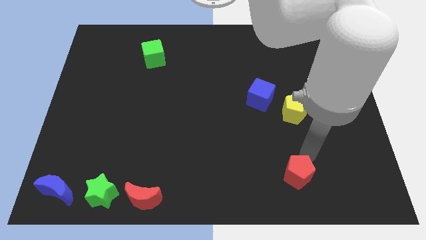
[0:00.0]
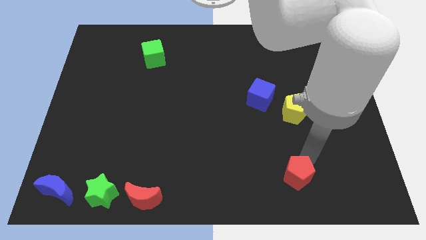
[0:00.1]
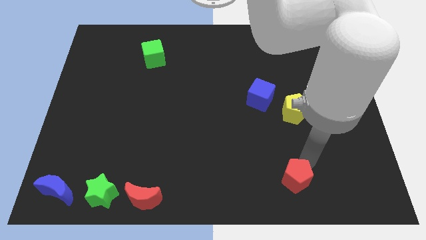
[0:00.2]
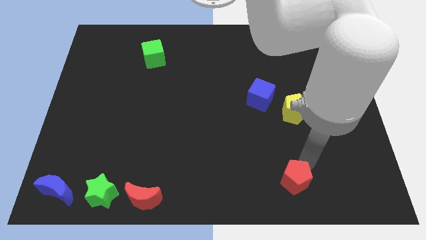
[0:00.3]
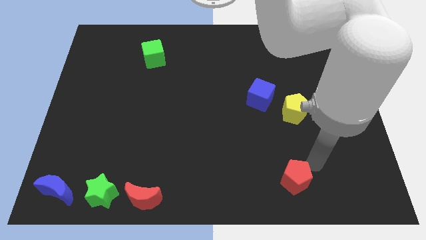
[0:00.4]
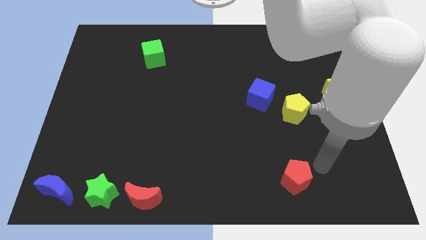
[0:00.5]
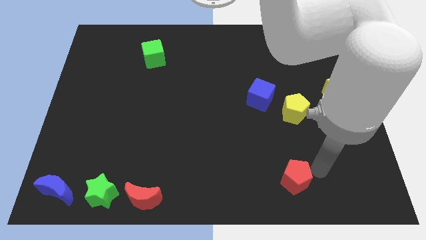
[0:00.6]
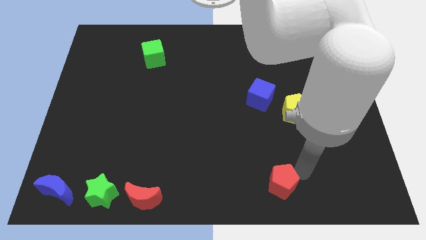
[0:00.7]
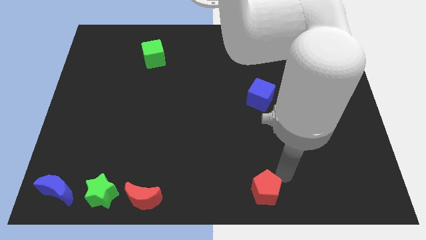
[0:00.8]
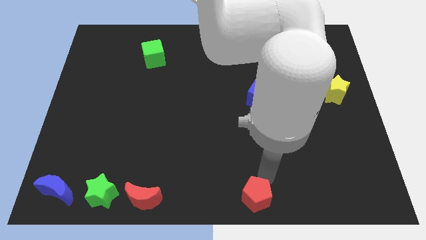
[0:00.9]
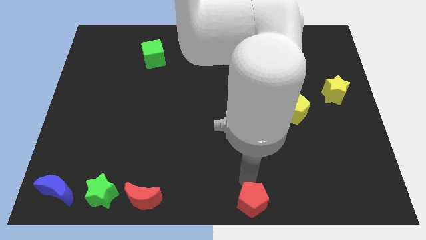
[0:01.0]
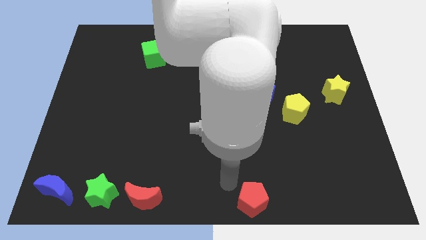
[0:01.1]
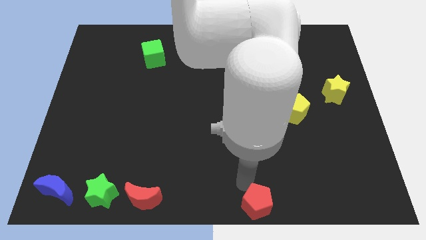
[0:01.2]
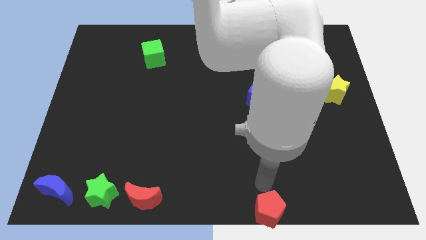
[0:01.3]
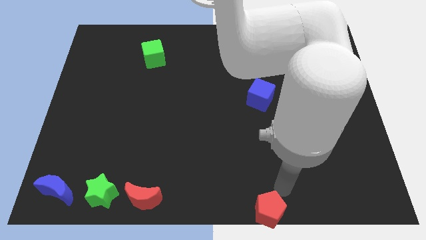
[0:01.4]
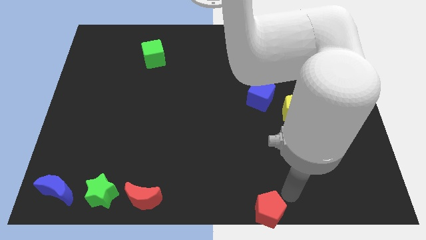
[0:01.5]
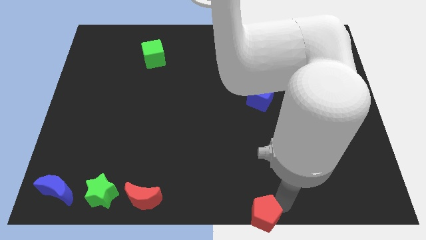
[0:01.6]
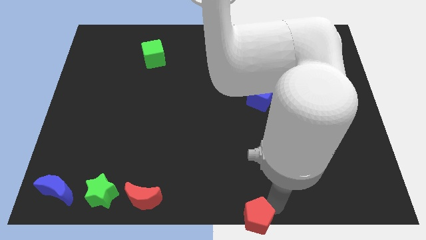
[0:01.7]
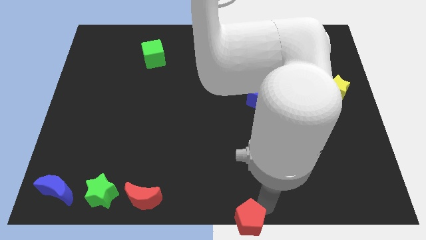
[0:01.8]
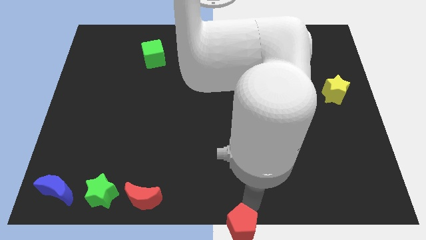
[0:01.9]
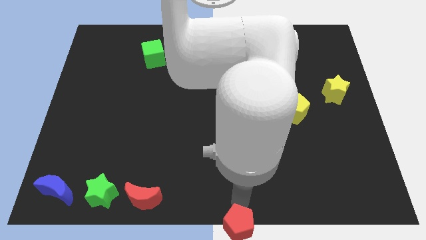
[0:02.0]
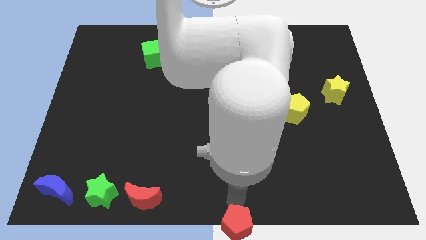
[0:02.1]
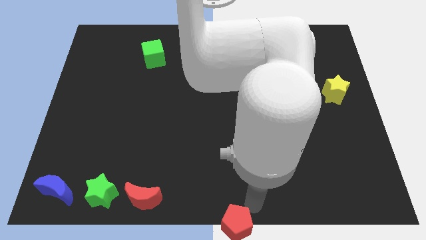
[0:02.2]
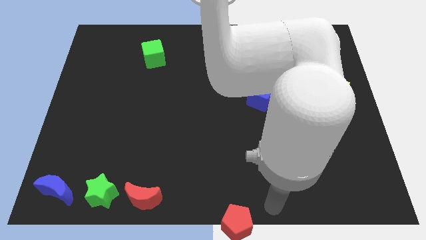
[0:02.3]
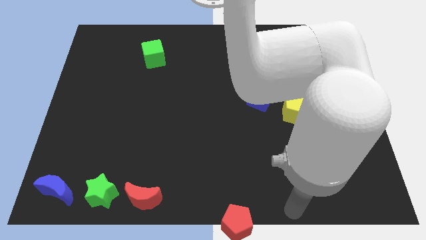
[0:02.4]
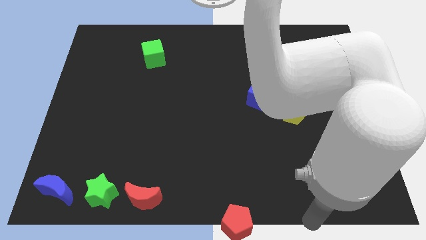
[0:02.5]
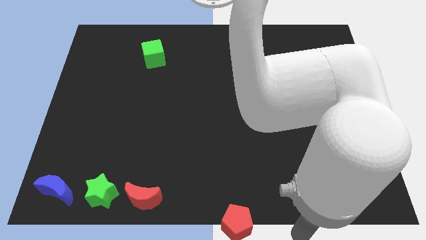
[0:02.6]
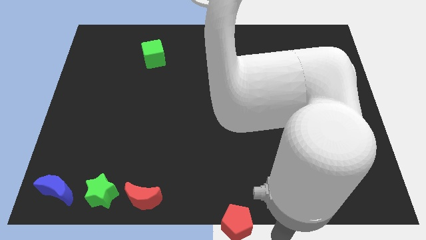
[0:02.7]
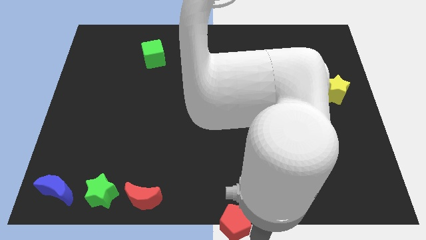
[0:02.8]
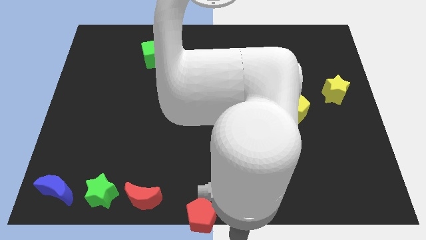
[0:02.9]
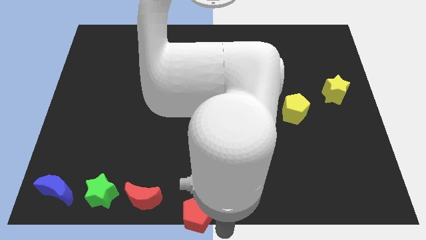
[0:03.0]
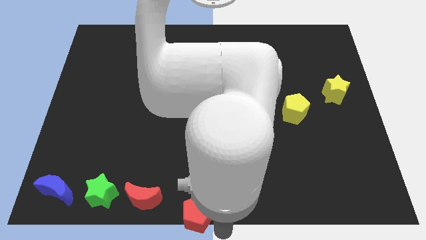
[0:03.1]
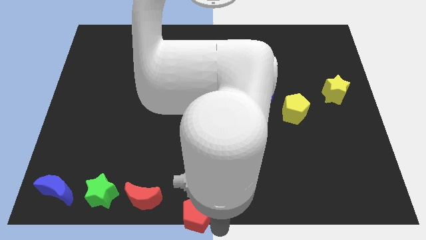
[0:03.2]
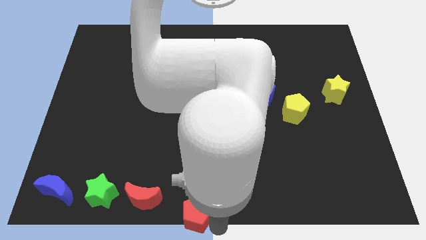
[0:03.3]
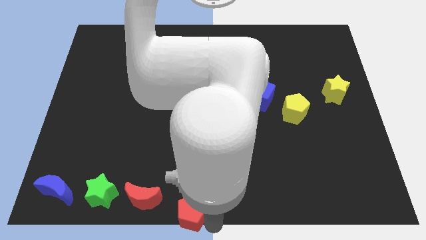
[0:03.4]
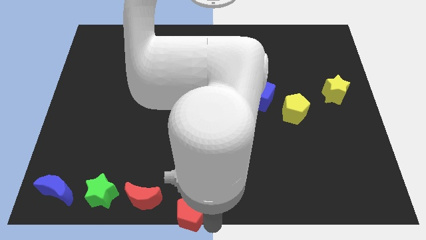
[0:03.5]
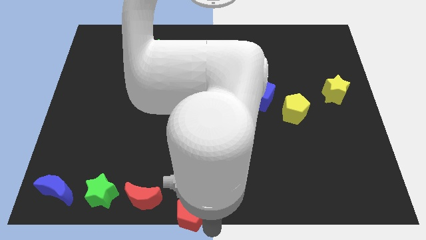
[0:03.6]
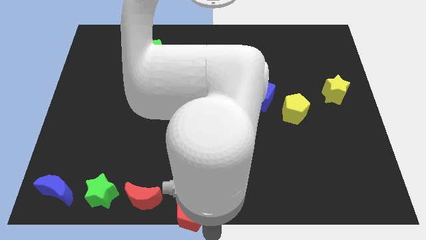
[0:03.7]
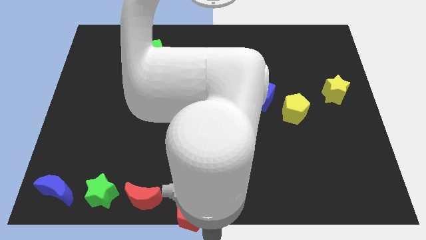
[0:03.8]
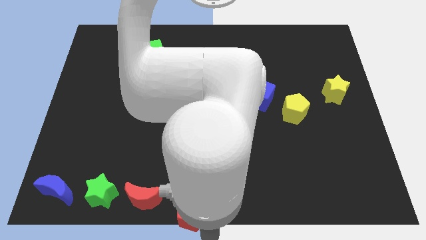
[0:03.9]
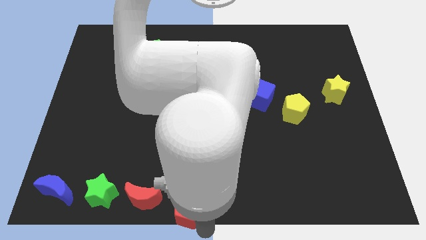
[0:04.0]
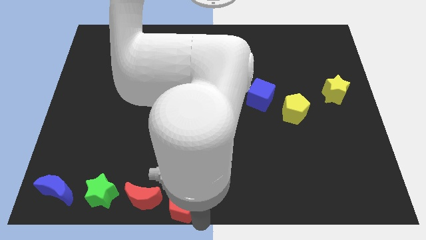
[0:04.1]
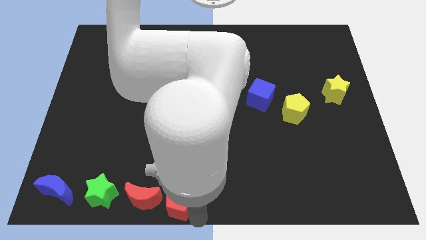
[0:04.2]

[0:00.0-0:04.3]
place the red pentagon to the right of the red moon

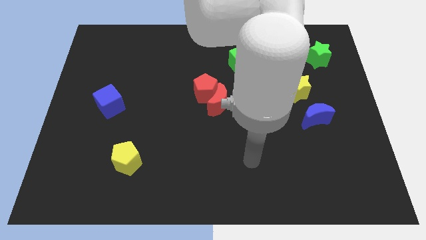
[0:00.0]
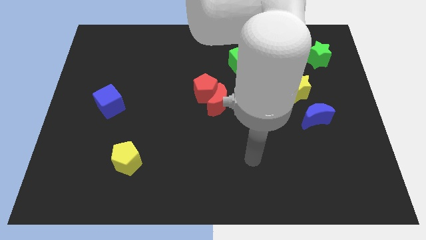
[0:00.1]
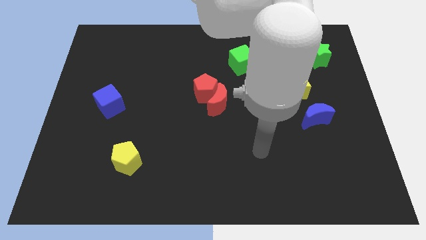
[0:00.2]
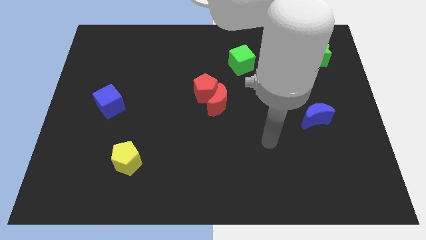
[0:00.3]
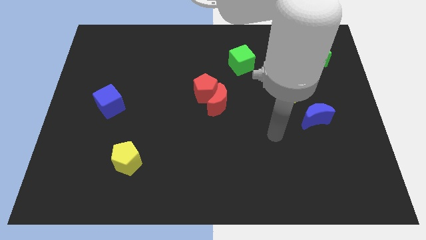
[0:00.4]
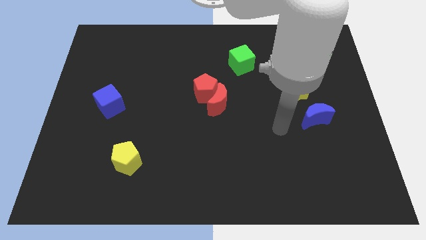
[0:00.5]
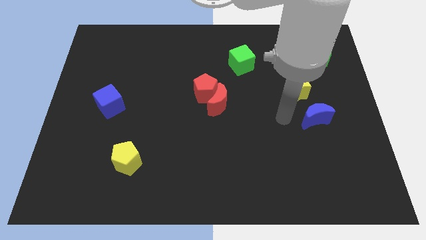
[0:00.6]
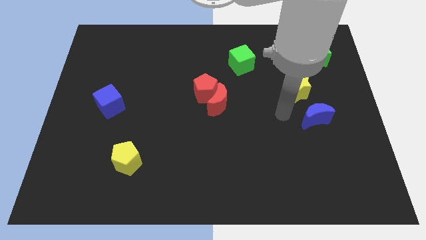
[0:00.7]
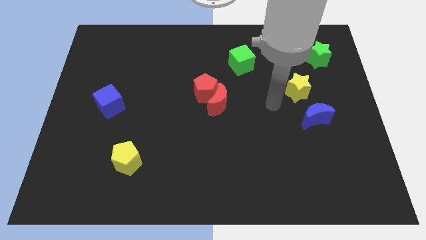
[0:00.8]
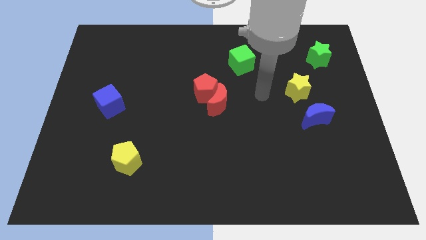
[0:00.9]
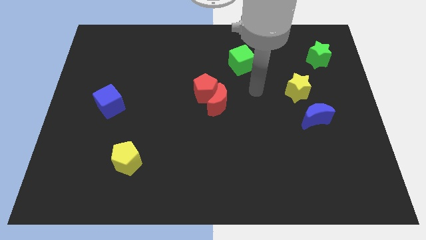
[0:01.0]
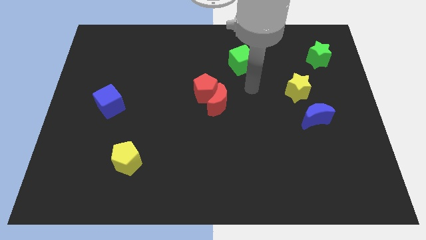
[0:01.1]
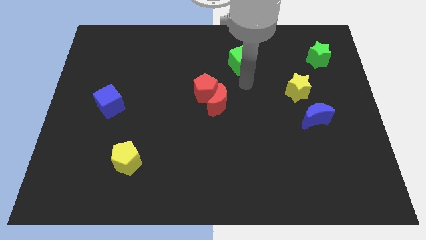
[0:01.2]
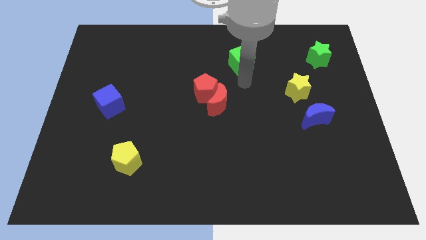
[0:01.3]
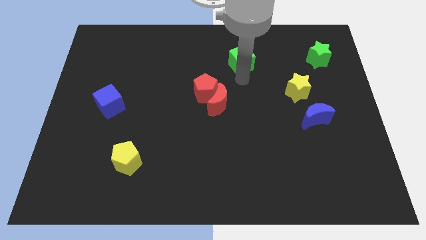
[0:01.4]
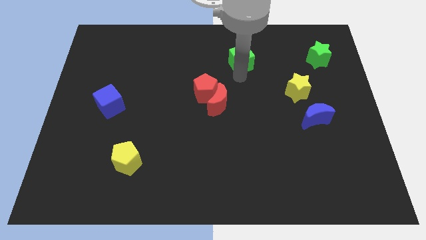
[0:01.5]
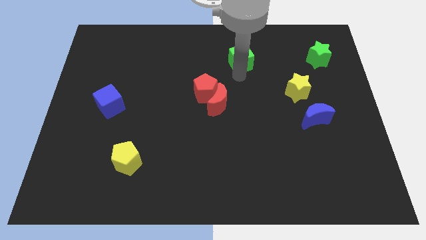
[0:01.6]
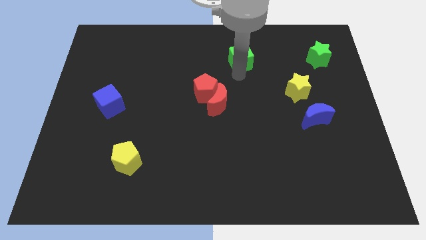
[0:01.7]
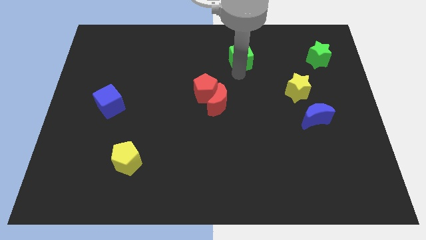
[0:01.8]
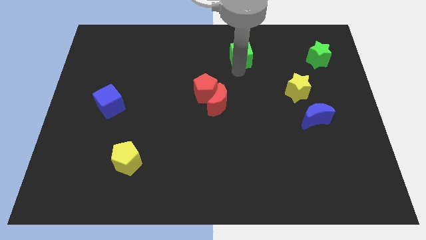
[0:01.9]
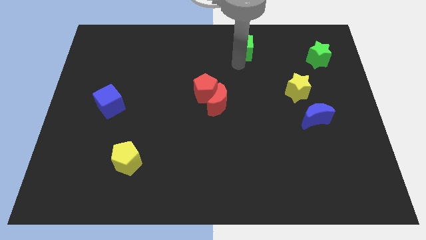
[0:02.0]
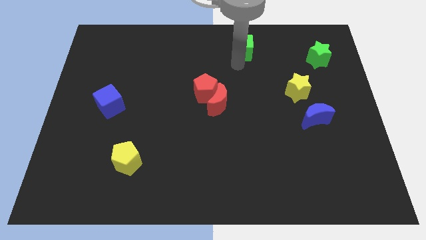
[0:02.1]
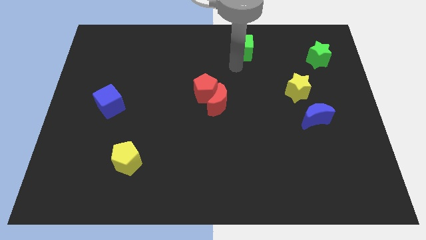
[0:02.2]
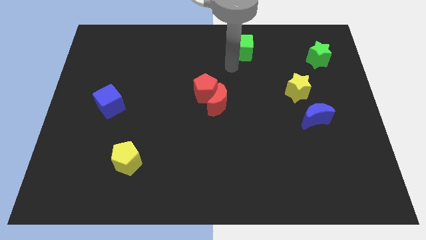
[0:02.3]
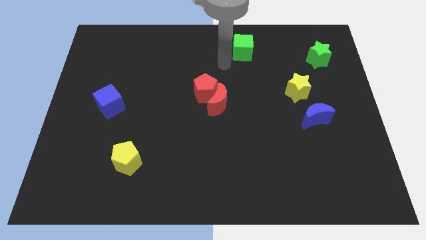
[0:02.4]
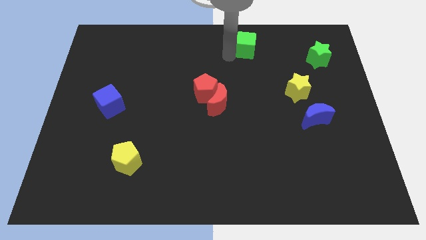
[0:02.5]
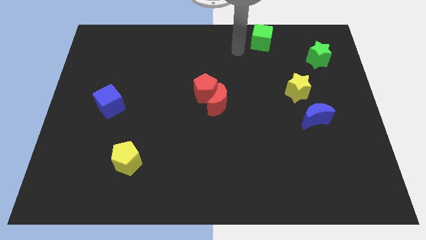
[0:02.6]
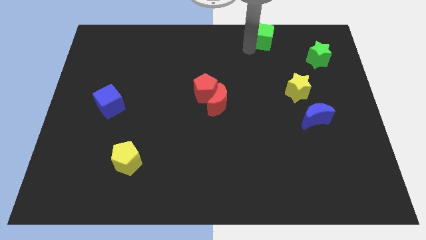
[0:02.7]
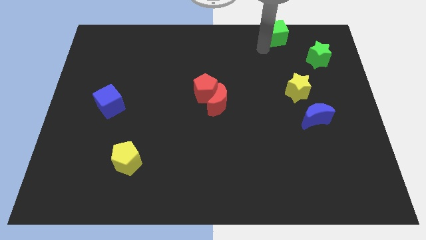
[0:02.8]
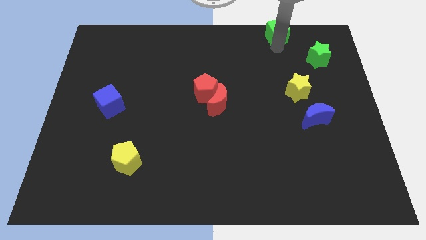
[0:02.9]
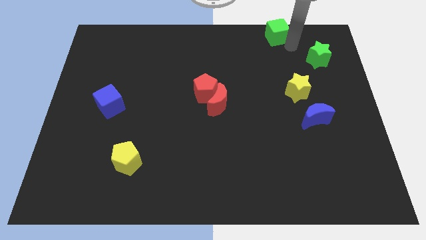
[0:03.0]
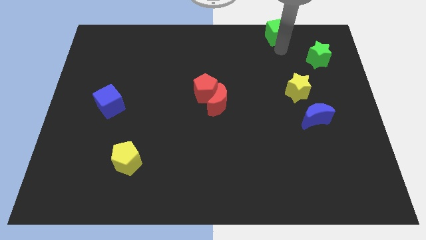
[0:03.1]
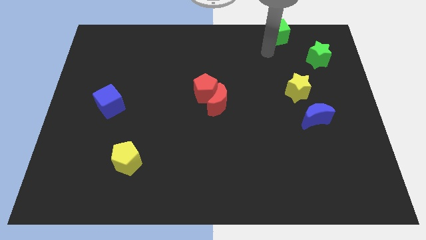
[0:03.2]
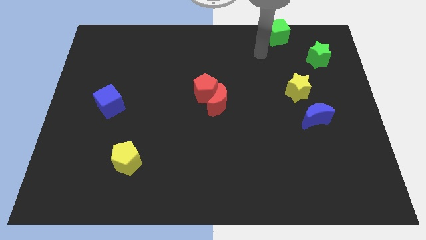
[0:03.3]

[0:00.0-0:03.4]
place green cube to the top of yellow star

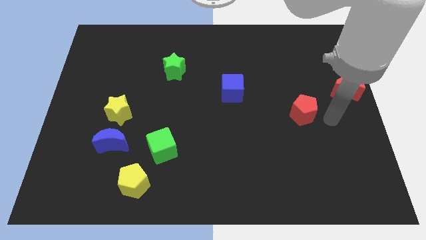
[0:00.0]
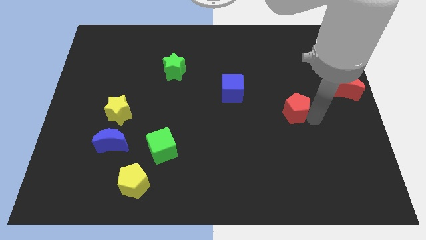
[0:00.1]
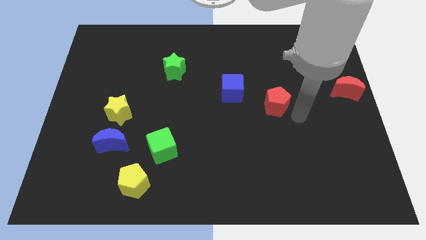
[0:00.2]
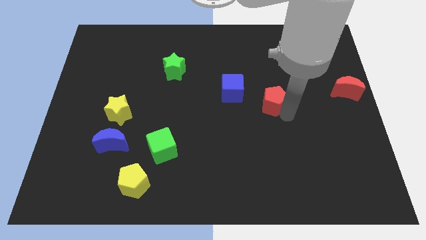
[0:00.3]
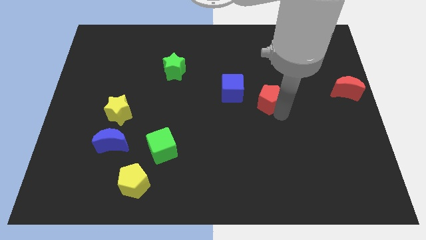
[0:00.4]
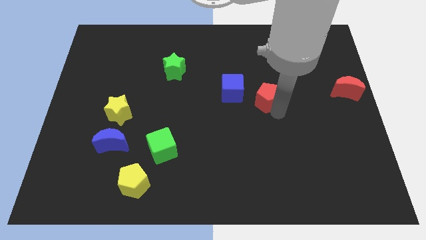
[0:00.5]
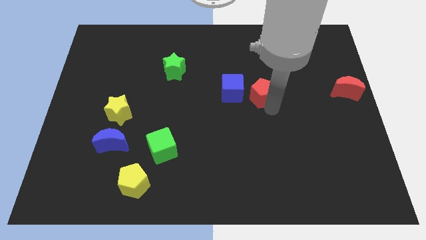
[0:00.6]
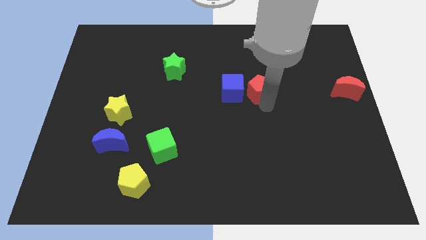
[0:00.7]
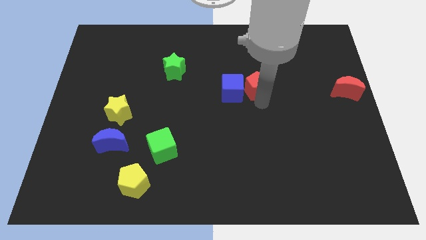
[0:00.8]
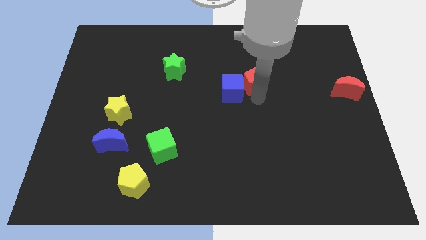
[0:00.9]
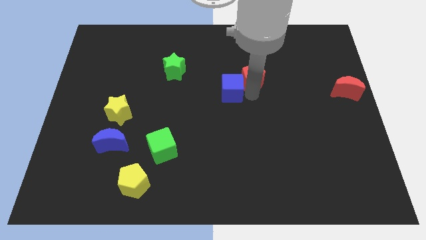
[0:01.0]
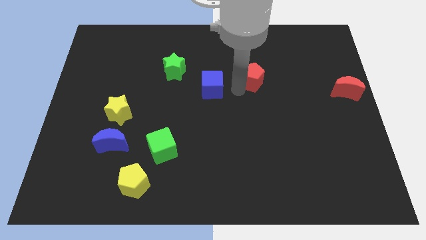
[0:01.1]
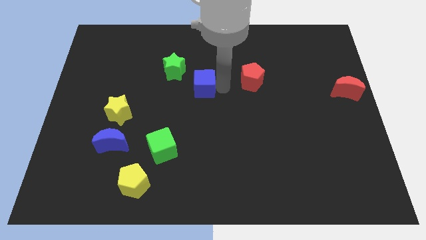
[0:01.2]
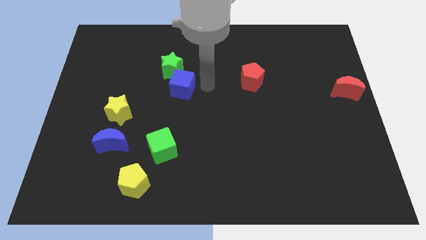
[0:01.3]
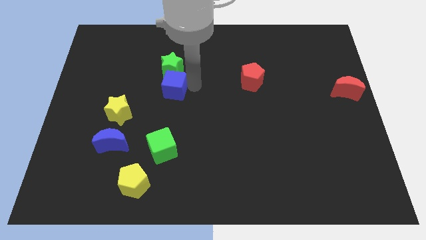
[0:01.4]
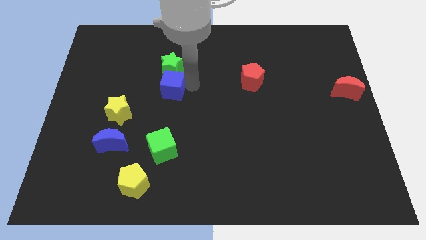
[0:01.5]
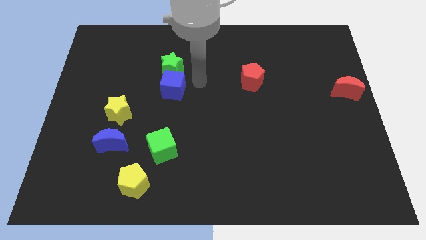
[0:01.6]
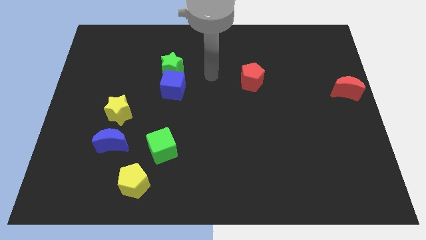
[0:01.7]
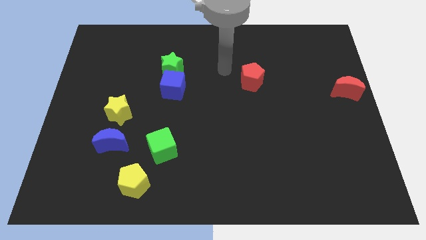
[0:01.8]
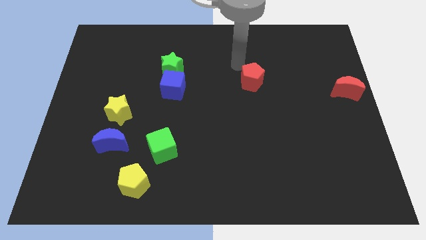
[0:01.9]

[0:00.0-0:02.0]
place the blue cube below to the green star
